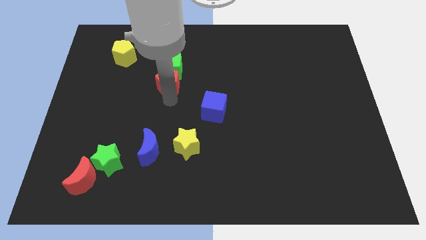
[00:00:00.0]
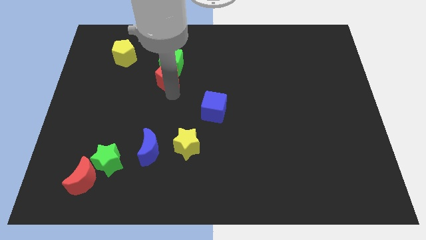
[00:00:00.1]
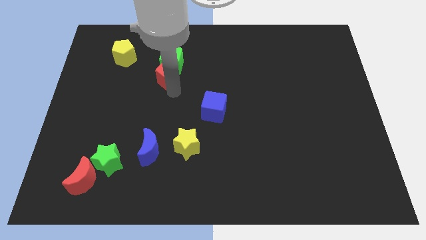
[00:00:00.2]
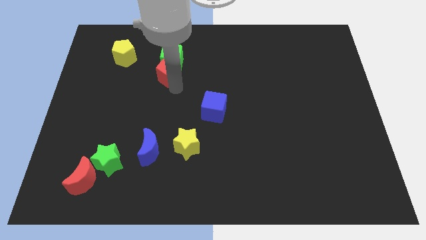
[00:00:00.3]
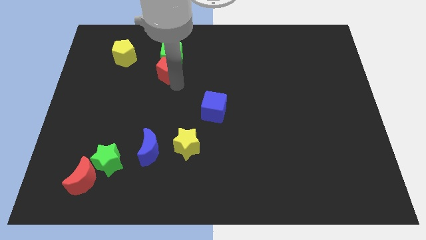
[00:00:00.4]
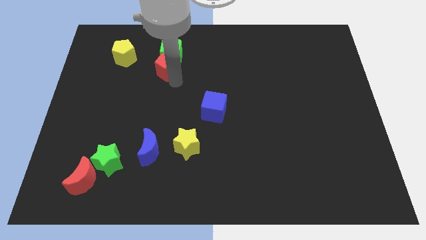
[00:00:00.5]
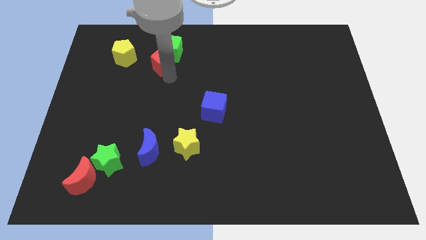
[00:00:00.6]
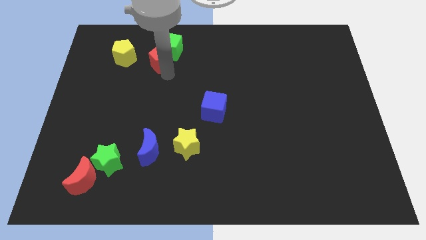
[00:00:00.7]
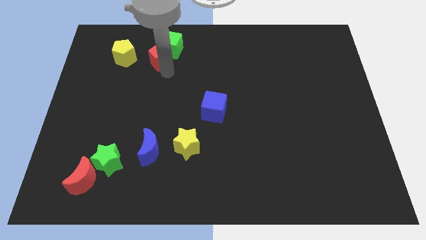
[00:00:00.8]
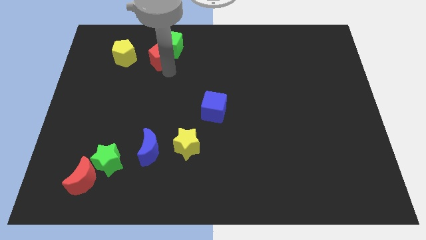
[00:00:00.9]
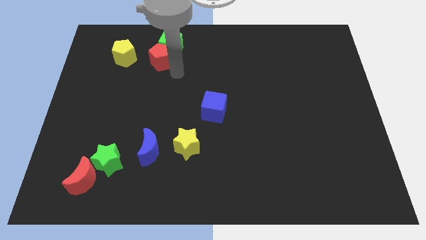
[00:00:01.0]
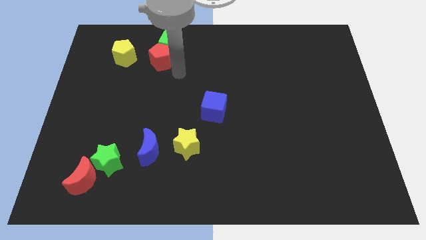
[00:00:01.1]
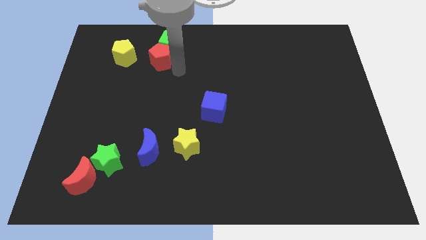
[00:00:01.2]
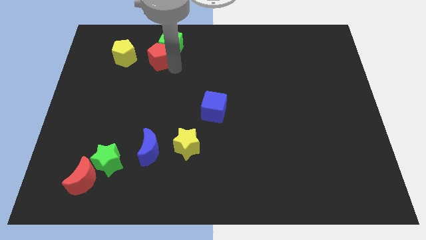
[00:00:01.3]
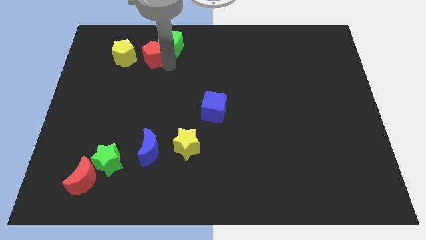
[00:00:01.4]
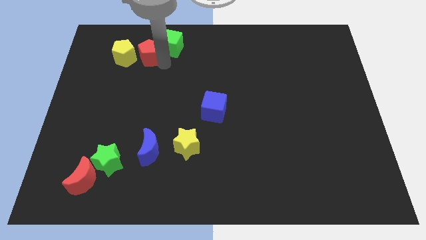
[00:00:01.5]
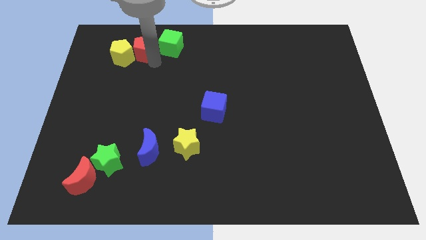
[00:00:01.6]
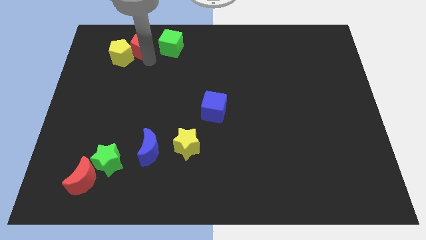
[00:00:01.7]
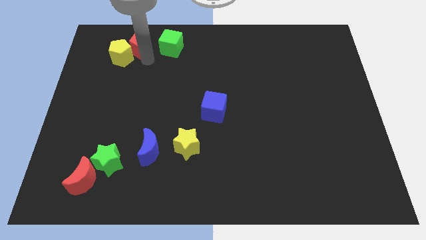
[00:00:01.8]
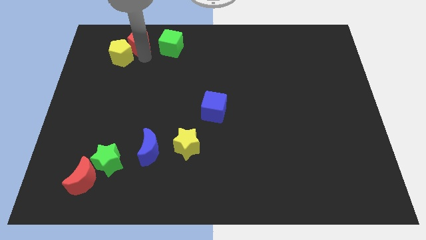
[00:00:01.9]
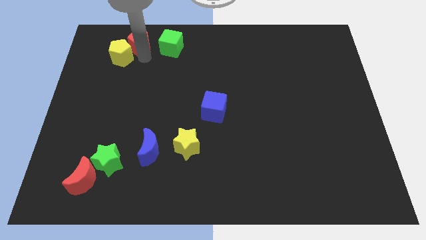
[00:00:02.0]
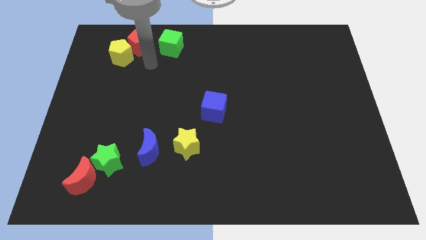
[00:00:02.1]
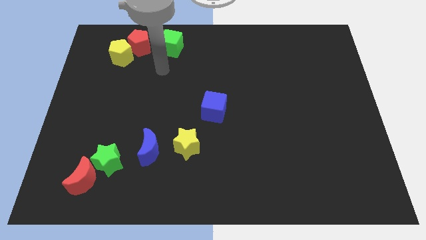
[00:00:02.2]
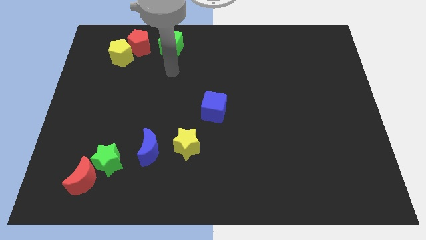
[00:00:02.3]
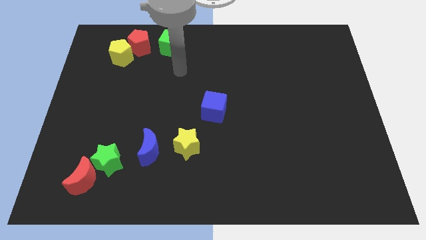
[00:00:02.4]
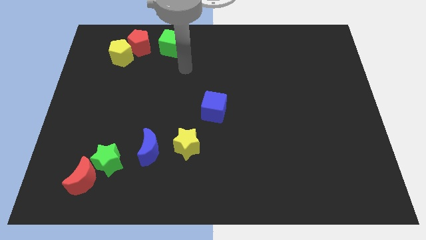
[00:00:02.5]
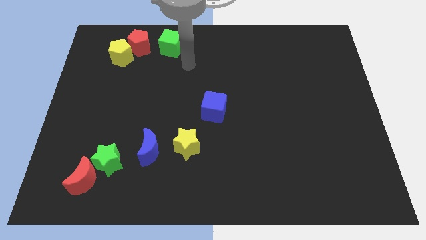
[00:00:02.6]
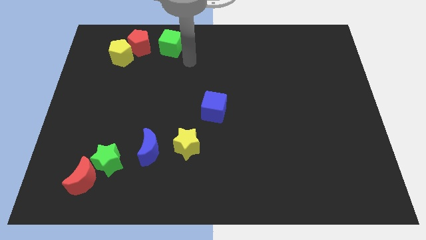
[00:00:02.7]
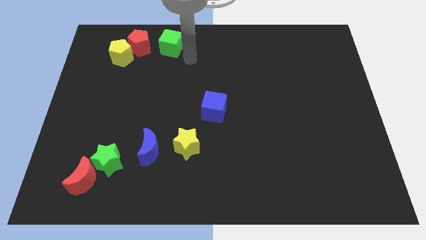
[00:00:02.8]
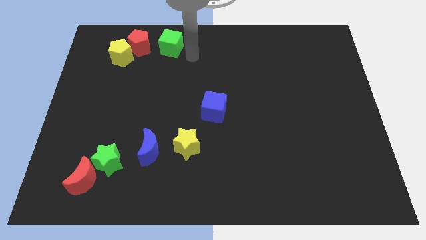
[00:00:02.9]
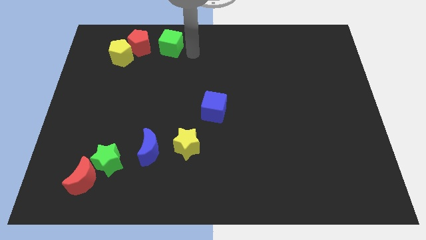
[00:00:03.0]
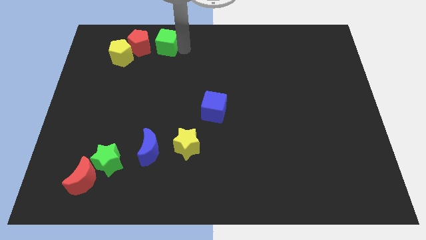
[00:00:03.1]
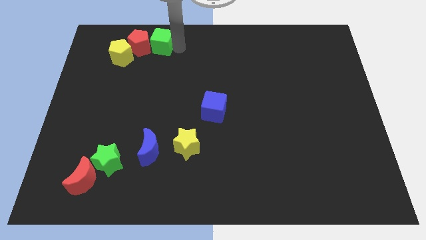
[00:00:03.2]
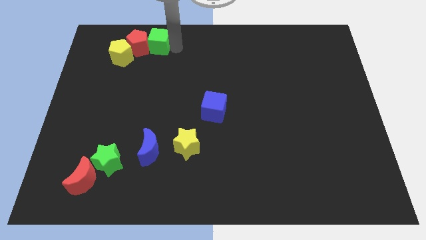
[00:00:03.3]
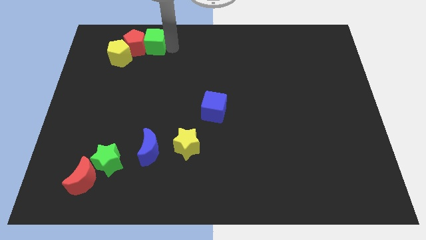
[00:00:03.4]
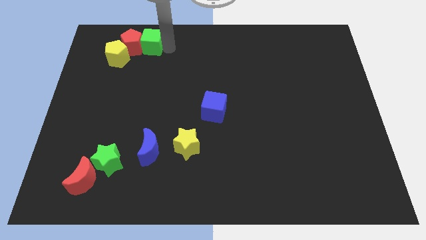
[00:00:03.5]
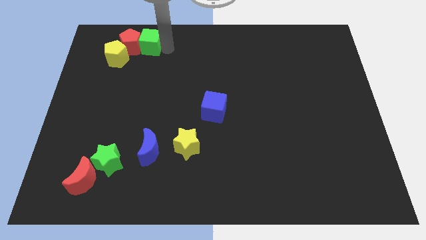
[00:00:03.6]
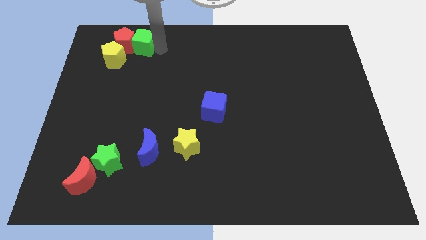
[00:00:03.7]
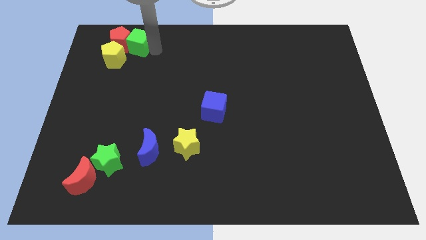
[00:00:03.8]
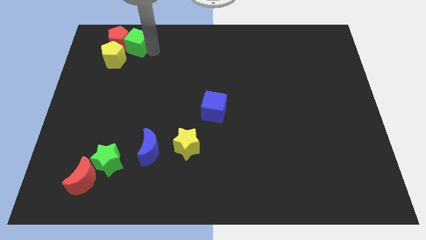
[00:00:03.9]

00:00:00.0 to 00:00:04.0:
move red pentagon along with green cube to the top left

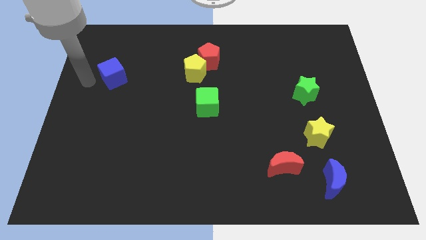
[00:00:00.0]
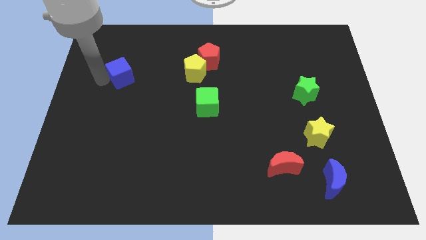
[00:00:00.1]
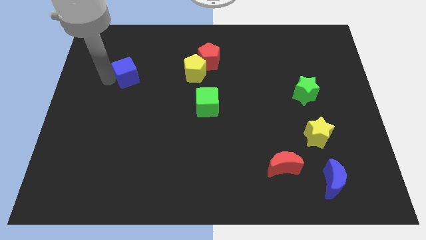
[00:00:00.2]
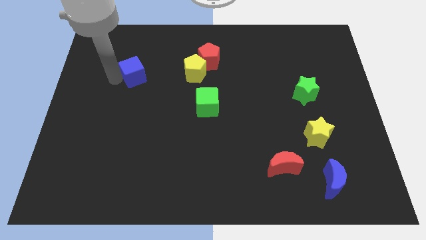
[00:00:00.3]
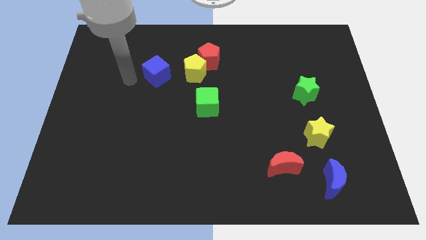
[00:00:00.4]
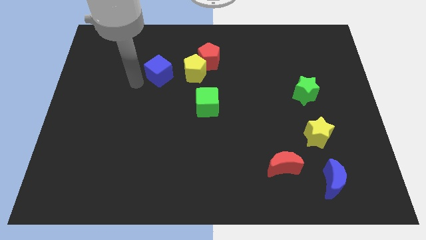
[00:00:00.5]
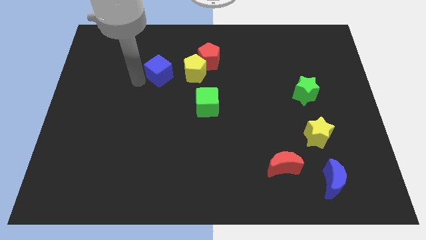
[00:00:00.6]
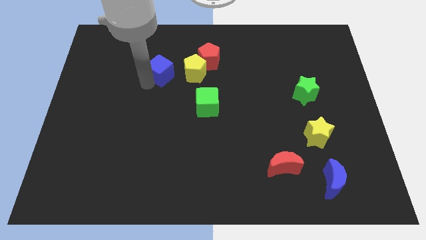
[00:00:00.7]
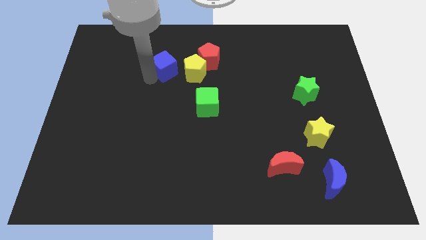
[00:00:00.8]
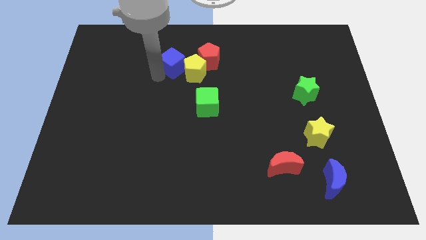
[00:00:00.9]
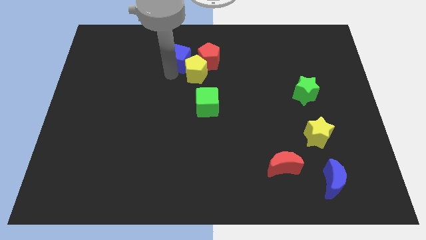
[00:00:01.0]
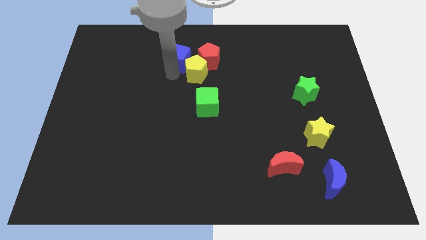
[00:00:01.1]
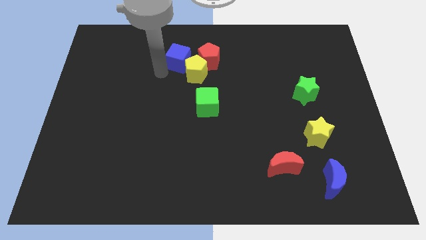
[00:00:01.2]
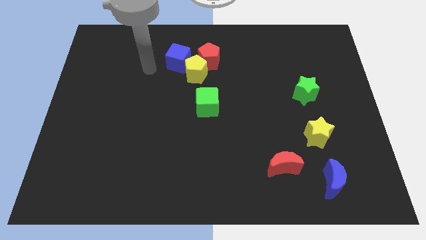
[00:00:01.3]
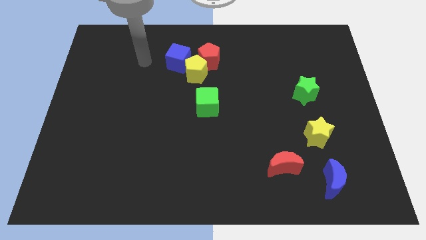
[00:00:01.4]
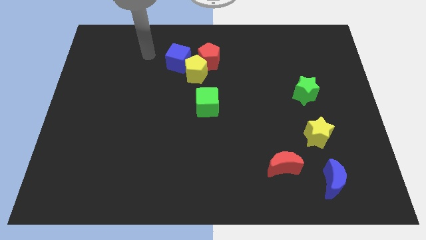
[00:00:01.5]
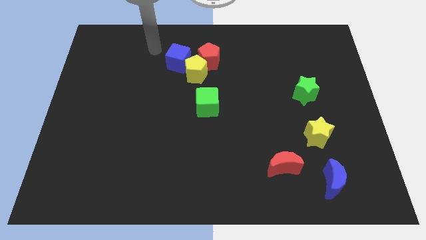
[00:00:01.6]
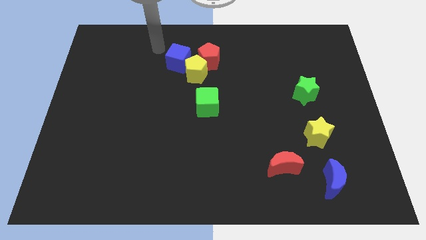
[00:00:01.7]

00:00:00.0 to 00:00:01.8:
move blue cube close to the yellow pentagon

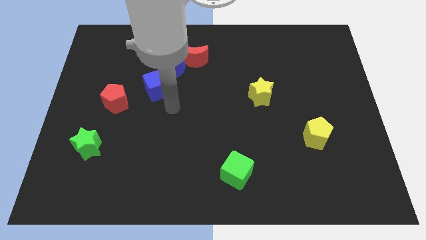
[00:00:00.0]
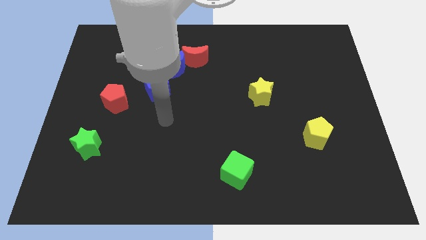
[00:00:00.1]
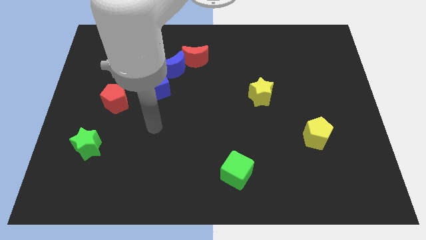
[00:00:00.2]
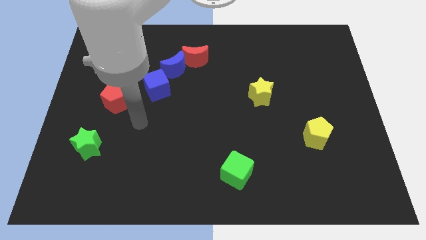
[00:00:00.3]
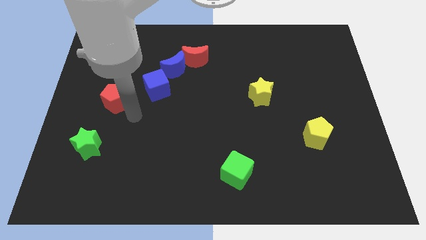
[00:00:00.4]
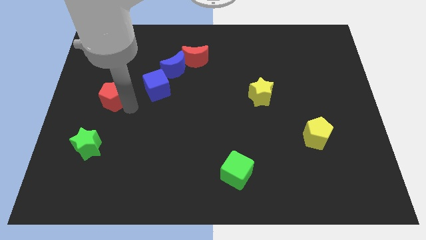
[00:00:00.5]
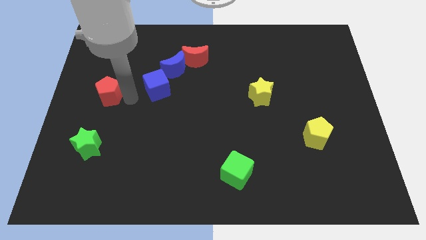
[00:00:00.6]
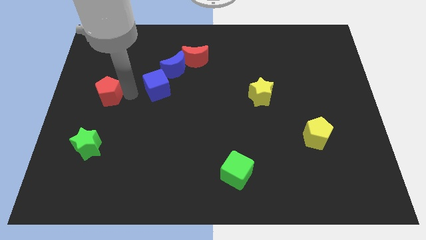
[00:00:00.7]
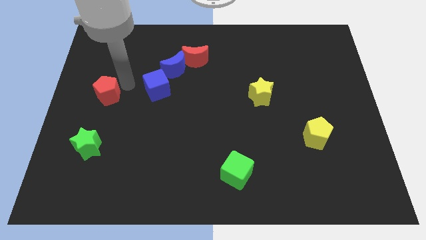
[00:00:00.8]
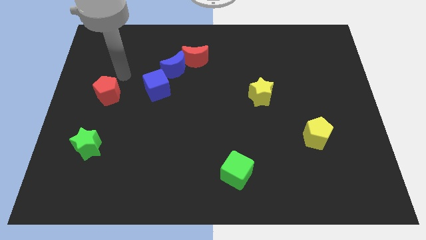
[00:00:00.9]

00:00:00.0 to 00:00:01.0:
push the red pentagon slightly to the left

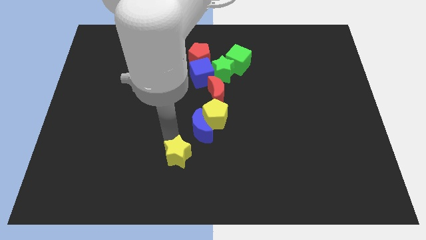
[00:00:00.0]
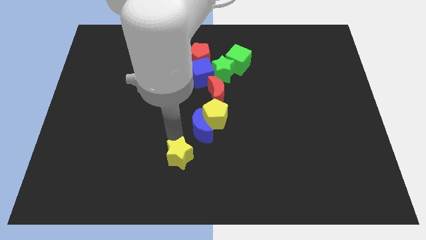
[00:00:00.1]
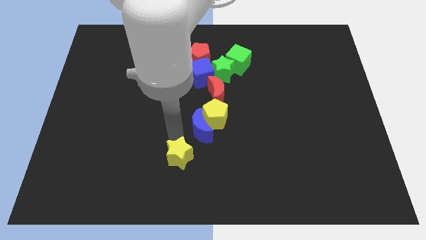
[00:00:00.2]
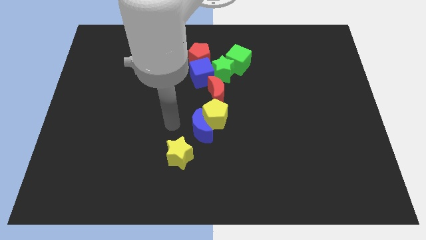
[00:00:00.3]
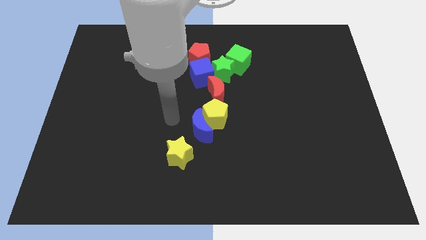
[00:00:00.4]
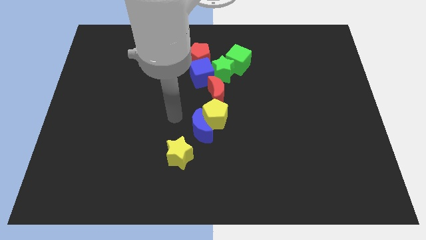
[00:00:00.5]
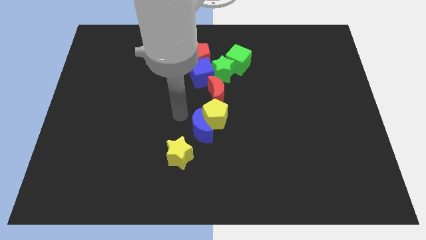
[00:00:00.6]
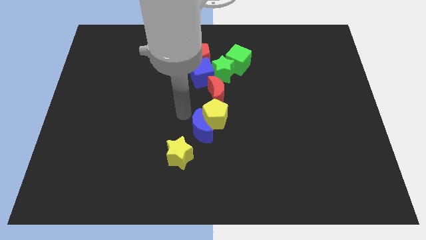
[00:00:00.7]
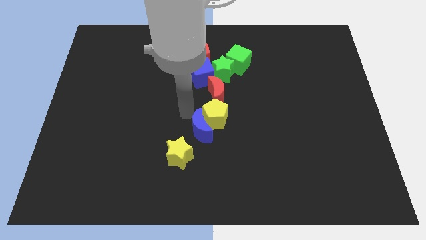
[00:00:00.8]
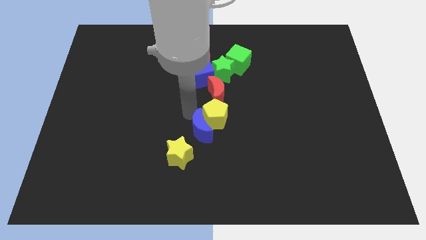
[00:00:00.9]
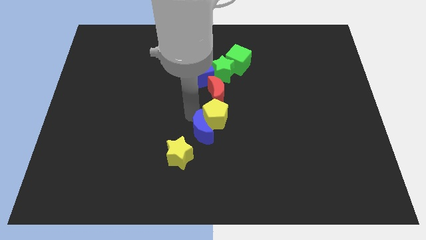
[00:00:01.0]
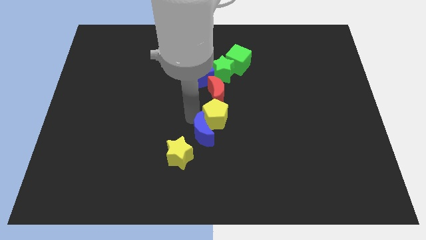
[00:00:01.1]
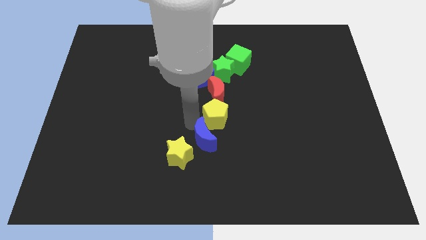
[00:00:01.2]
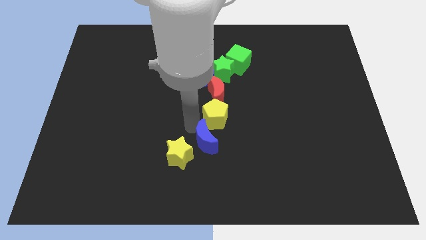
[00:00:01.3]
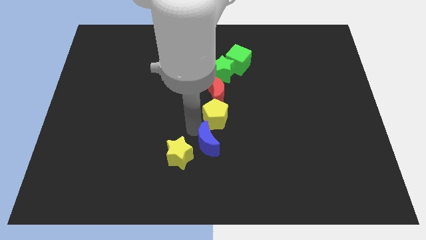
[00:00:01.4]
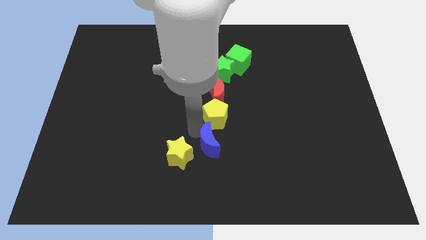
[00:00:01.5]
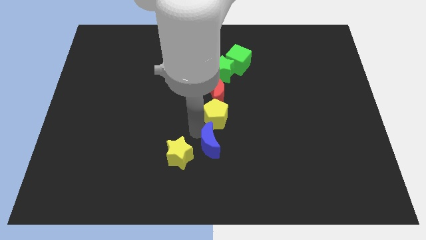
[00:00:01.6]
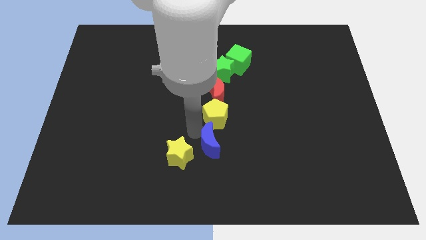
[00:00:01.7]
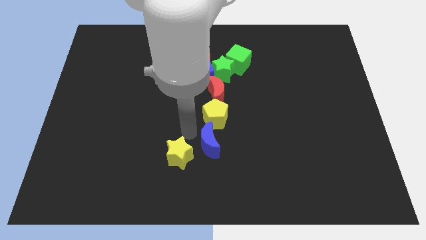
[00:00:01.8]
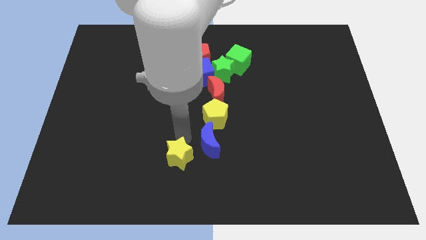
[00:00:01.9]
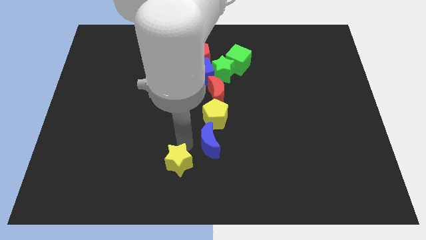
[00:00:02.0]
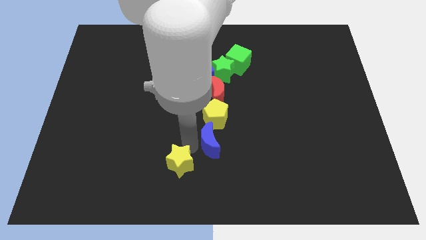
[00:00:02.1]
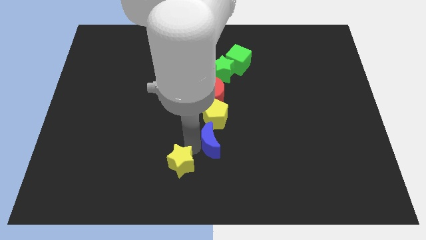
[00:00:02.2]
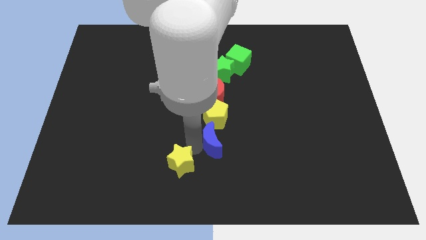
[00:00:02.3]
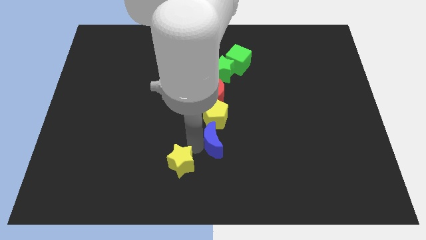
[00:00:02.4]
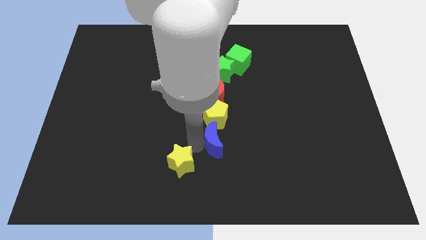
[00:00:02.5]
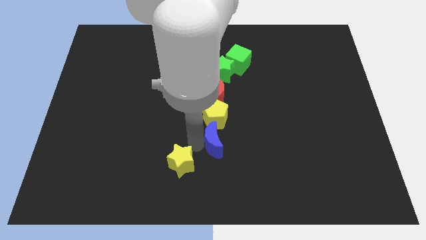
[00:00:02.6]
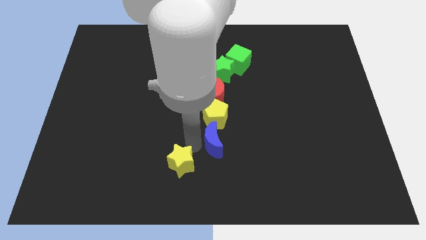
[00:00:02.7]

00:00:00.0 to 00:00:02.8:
place your arm in between the yellow star and the blue moon
